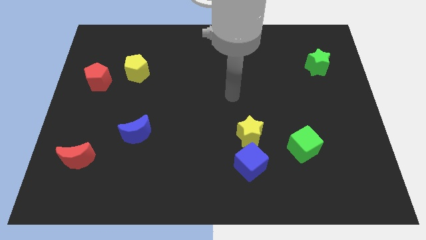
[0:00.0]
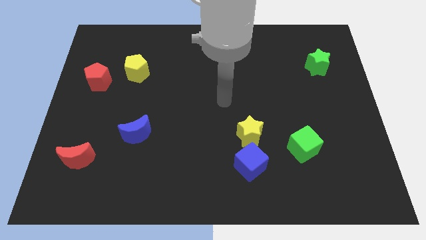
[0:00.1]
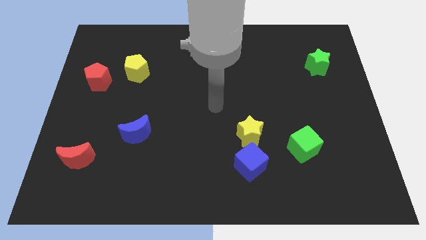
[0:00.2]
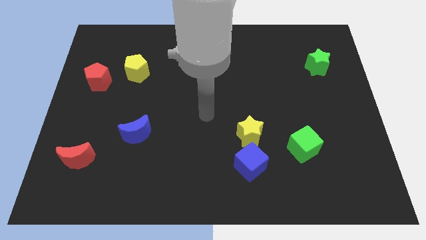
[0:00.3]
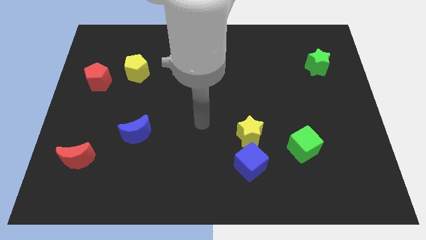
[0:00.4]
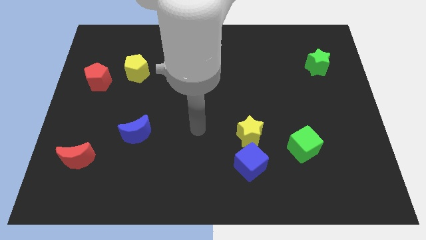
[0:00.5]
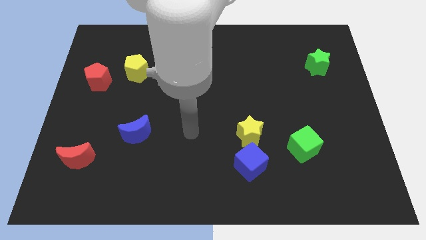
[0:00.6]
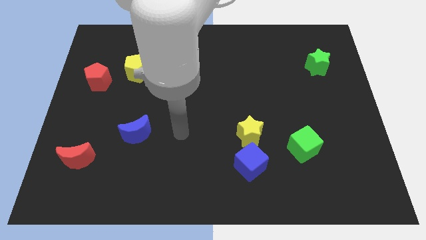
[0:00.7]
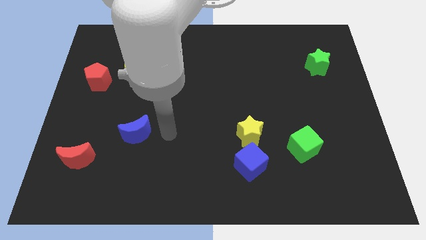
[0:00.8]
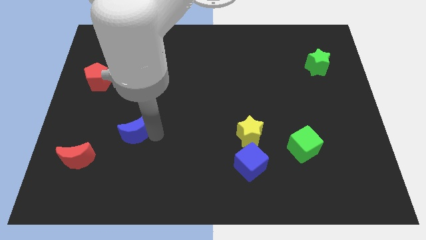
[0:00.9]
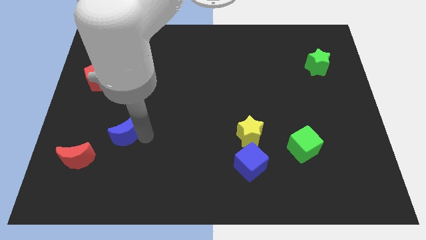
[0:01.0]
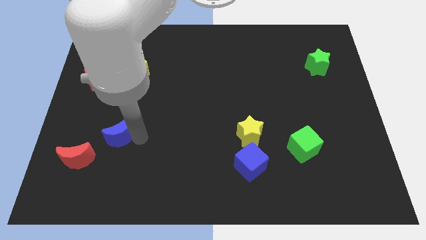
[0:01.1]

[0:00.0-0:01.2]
move the arm towards the blue crescent

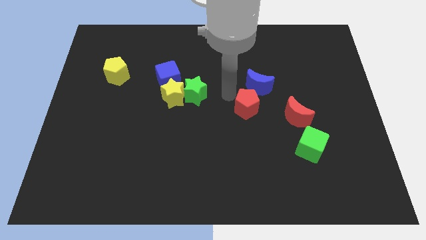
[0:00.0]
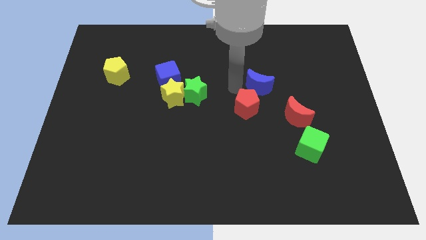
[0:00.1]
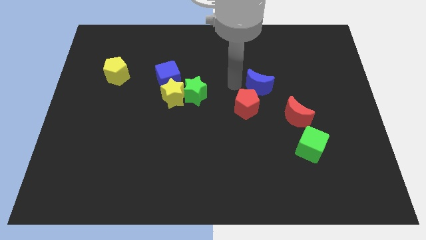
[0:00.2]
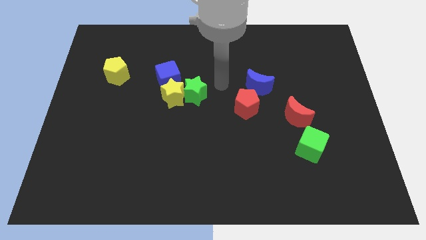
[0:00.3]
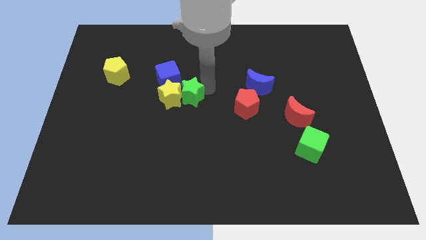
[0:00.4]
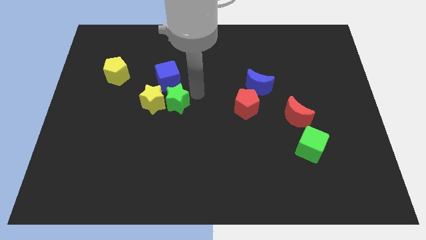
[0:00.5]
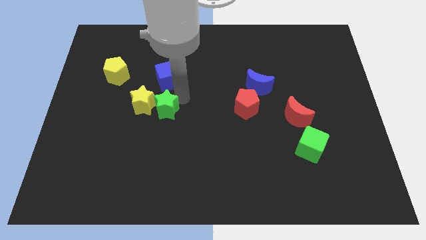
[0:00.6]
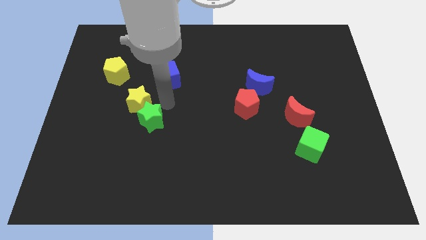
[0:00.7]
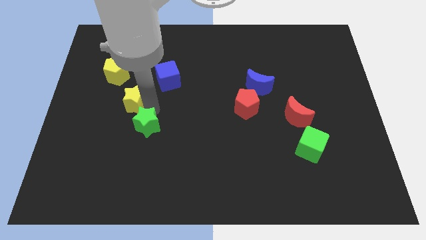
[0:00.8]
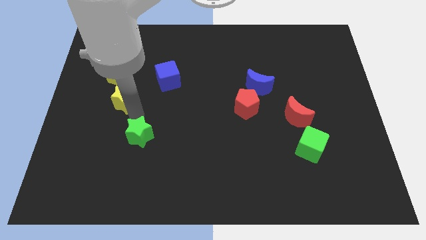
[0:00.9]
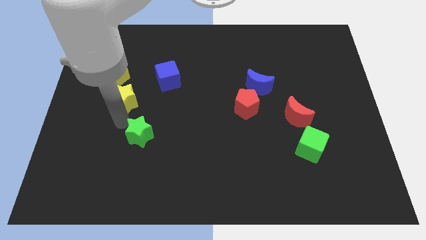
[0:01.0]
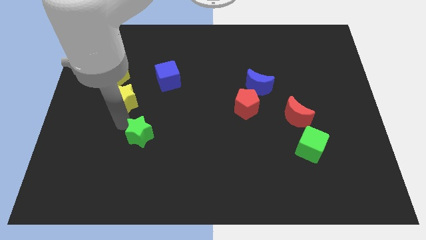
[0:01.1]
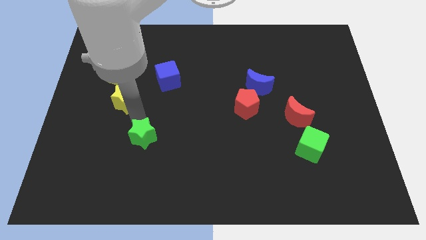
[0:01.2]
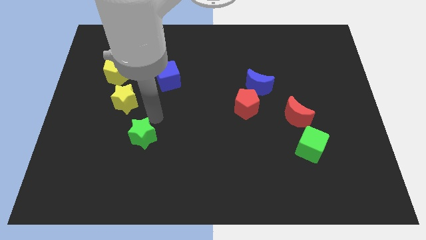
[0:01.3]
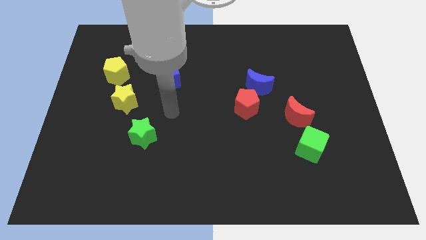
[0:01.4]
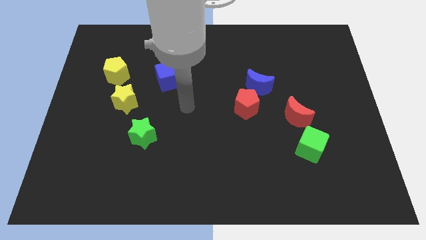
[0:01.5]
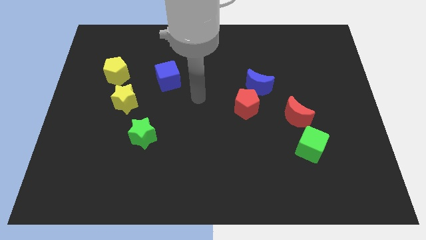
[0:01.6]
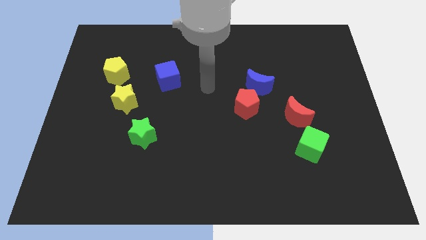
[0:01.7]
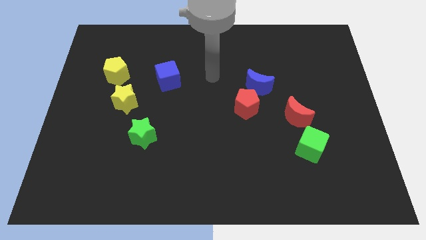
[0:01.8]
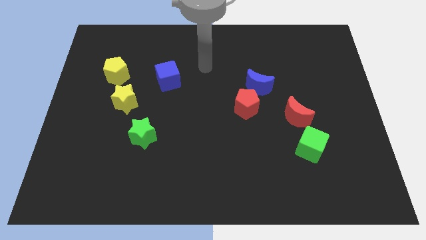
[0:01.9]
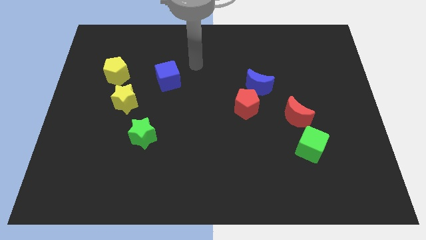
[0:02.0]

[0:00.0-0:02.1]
separate the yellow stra and green star from the blue cube

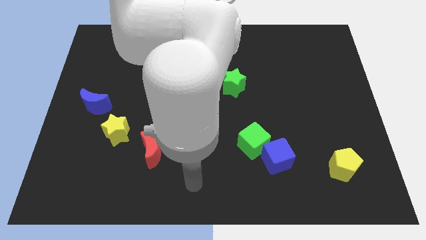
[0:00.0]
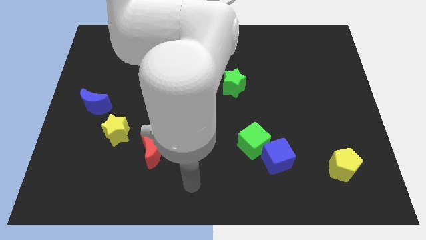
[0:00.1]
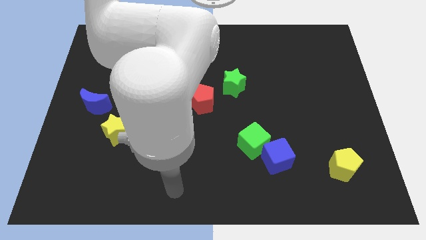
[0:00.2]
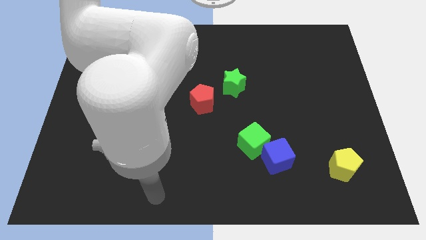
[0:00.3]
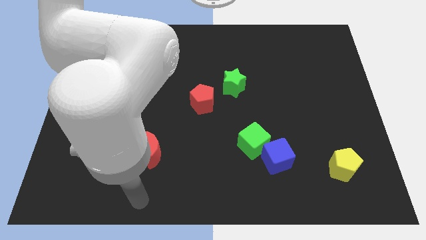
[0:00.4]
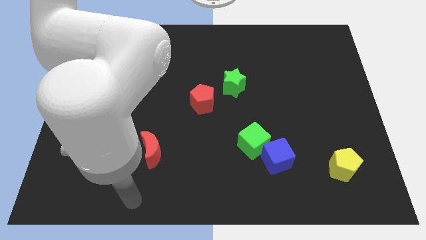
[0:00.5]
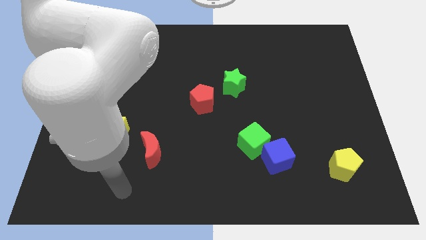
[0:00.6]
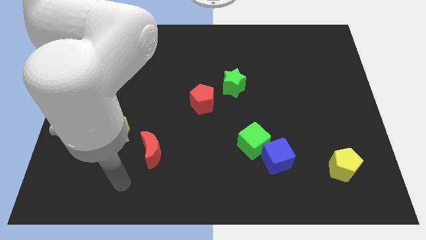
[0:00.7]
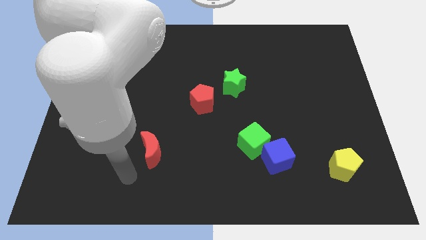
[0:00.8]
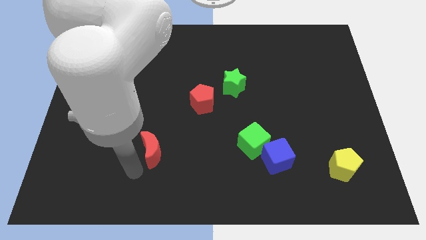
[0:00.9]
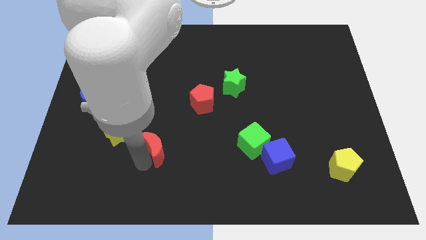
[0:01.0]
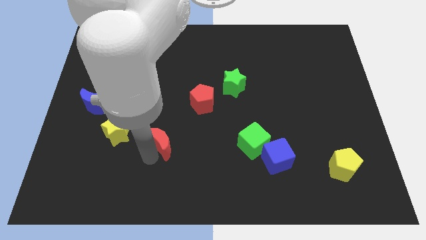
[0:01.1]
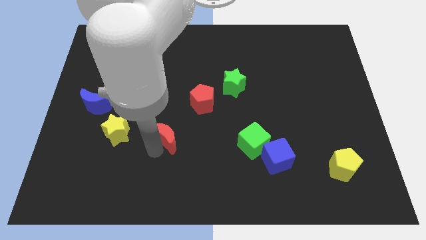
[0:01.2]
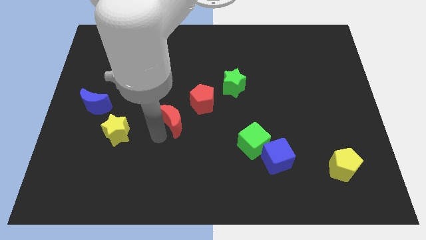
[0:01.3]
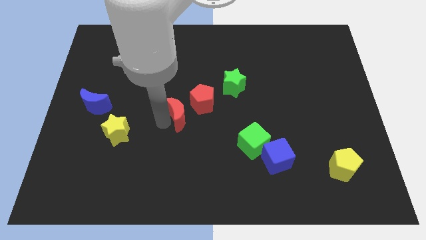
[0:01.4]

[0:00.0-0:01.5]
put the red moon between the yellow star and red pentagon

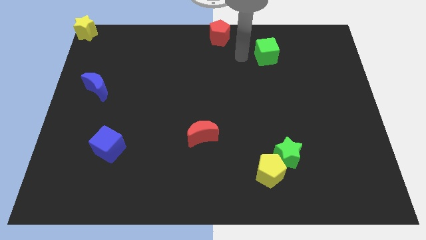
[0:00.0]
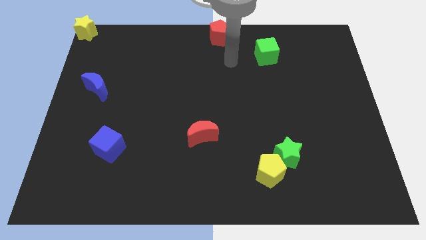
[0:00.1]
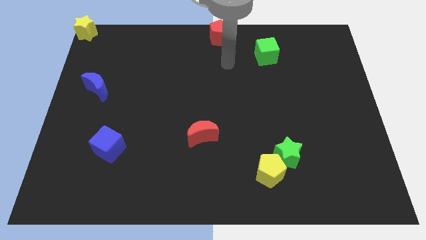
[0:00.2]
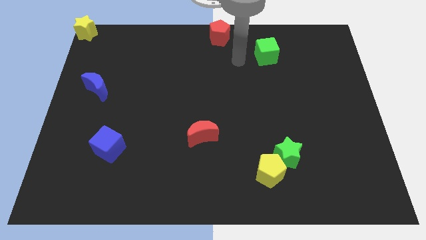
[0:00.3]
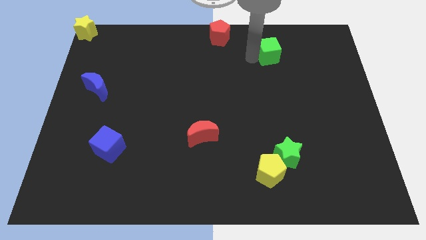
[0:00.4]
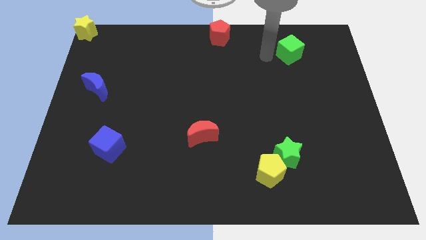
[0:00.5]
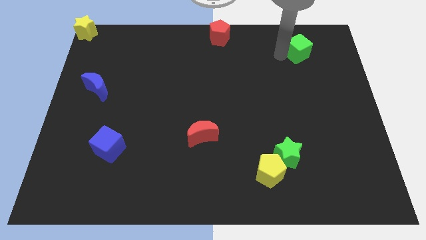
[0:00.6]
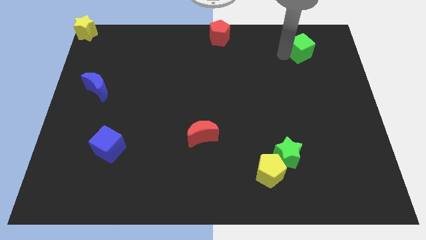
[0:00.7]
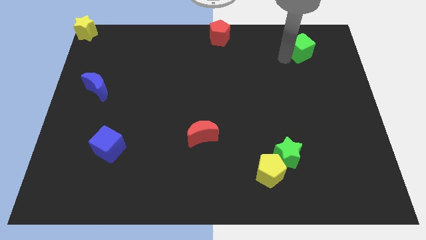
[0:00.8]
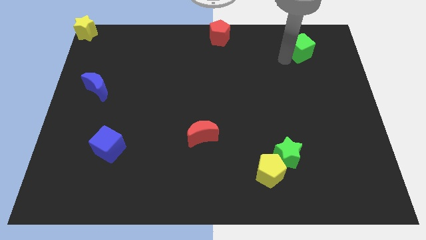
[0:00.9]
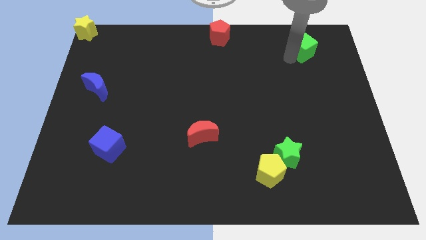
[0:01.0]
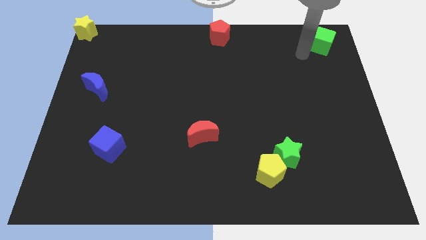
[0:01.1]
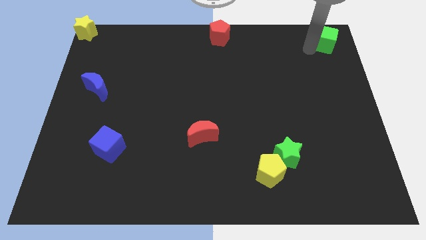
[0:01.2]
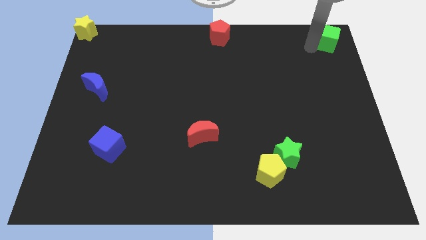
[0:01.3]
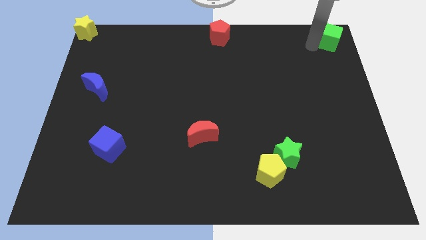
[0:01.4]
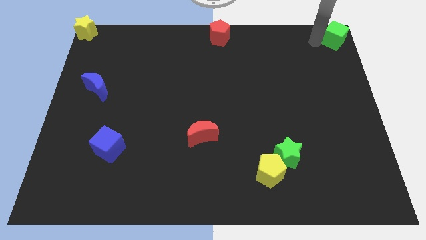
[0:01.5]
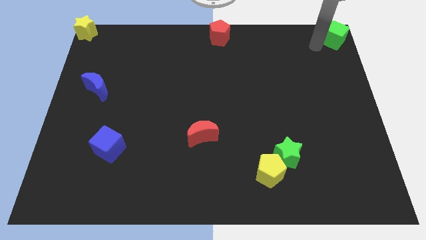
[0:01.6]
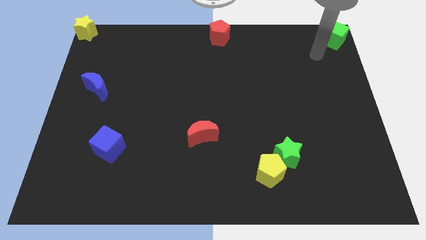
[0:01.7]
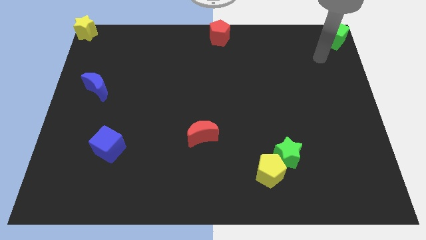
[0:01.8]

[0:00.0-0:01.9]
place the green cube at the top right corner of the board

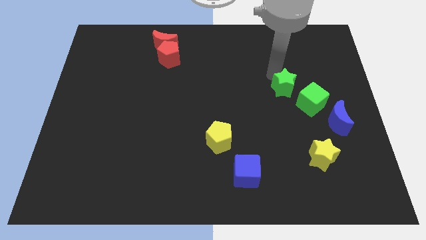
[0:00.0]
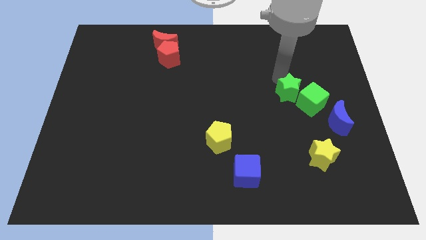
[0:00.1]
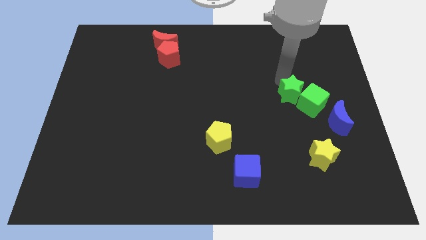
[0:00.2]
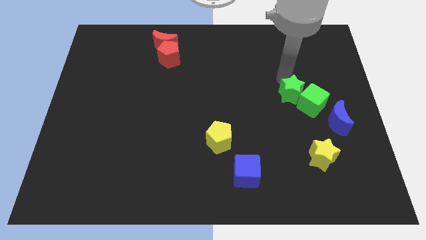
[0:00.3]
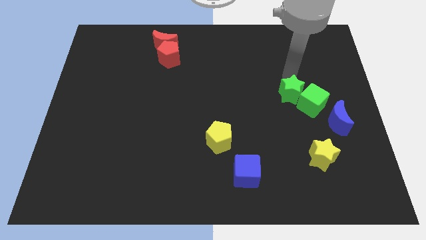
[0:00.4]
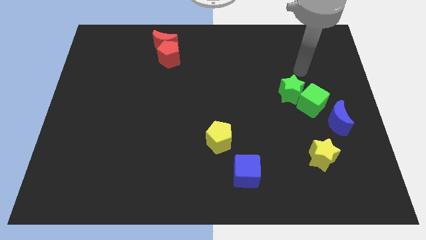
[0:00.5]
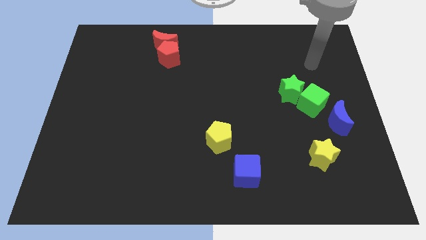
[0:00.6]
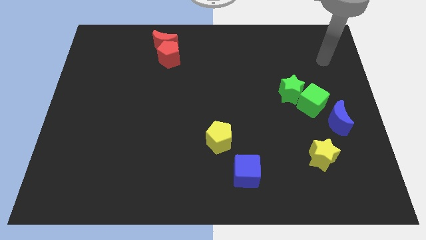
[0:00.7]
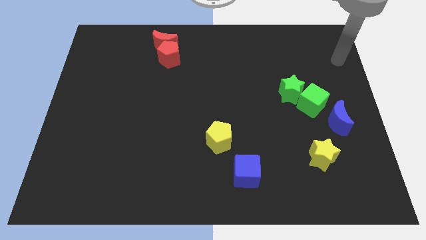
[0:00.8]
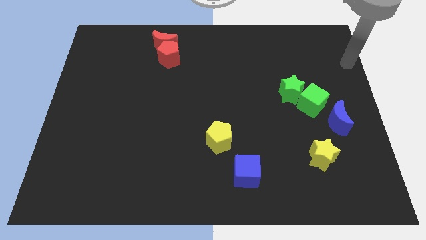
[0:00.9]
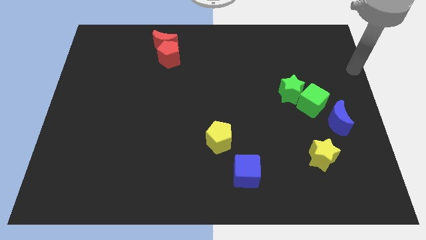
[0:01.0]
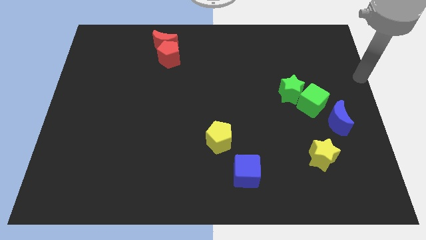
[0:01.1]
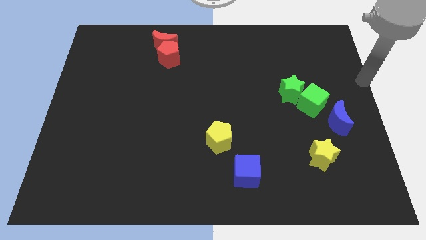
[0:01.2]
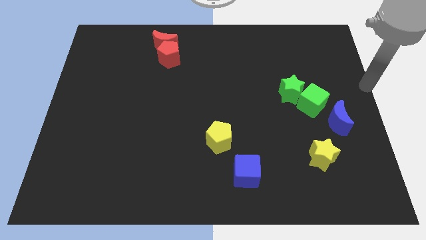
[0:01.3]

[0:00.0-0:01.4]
put the green star into the green cube

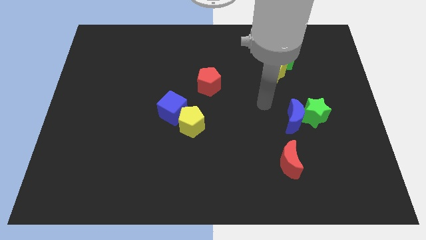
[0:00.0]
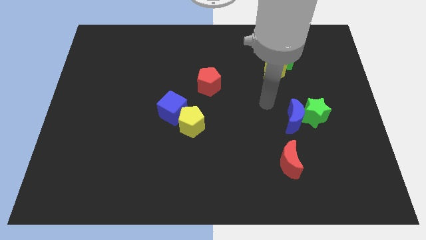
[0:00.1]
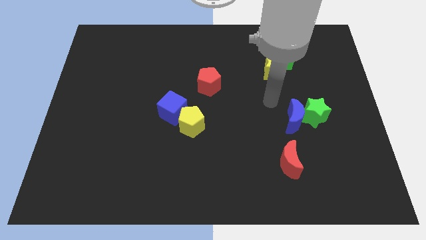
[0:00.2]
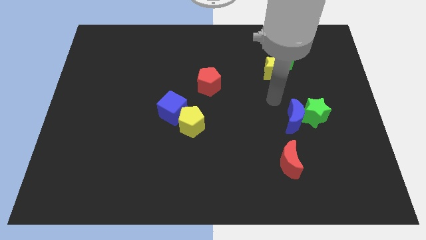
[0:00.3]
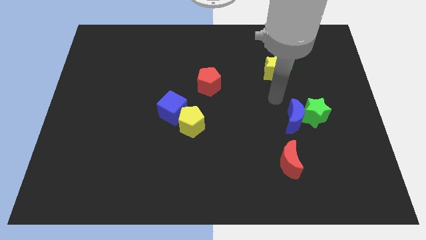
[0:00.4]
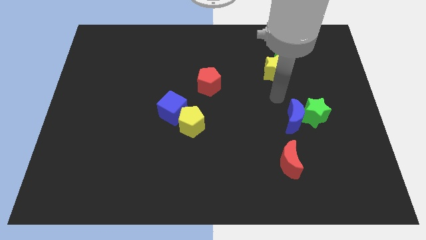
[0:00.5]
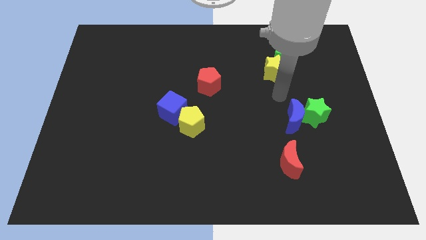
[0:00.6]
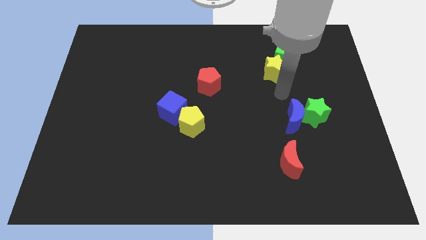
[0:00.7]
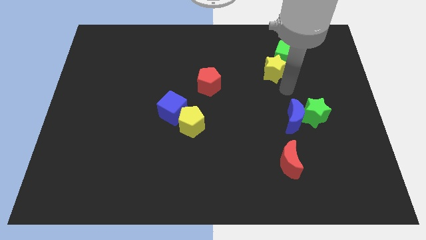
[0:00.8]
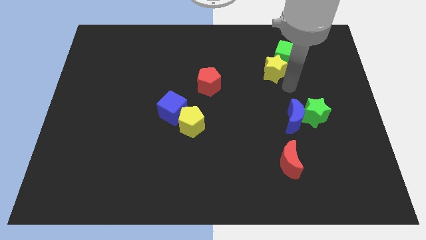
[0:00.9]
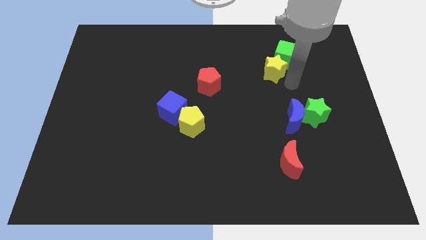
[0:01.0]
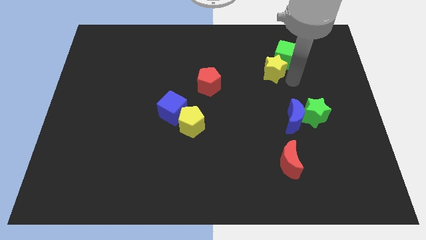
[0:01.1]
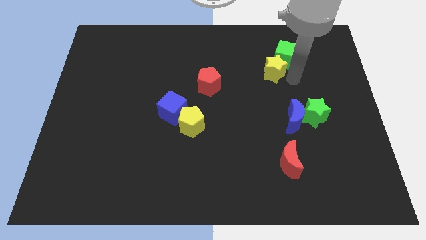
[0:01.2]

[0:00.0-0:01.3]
move your arm to the right side of the yellow star
